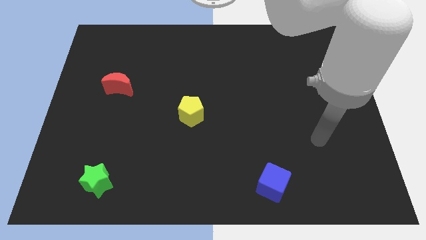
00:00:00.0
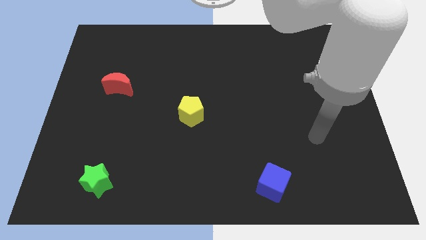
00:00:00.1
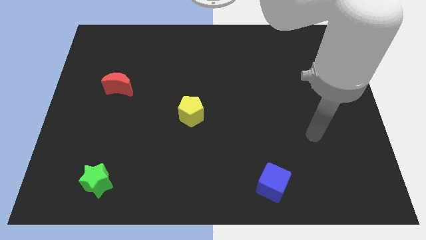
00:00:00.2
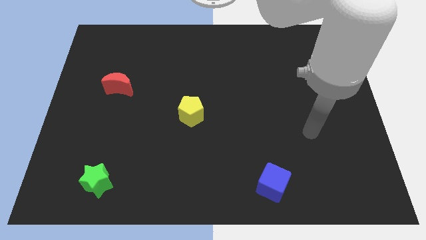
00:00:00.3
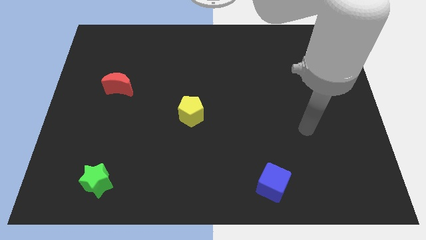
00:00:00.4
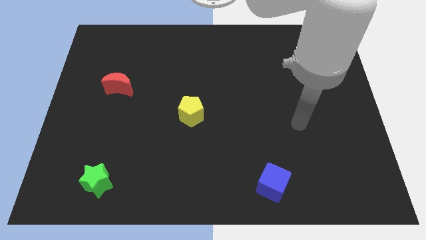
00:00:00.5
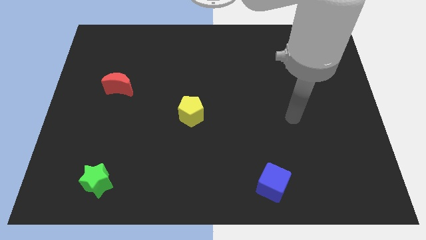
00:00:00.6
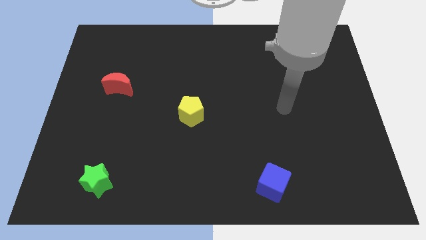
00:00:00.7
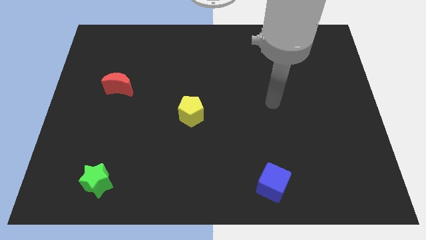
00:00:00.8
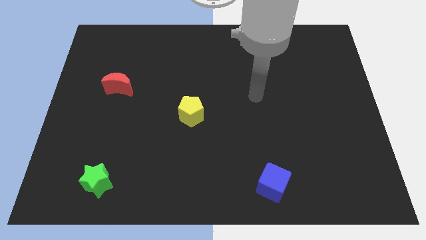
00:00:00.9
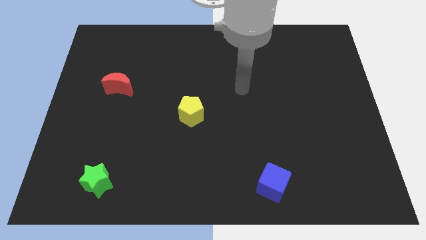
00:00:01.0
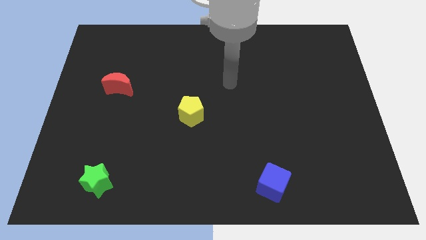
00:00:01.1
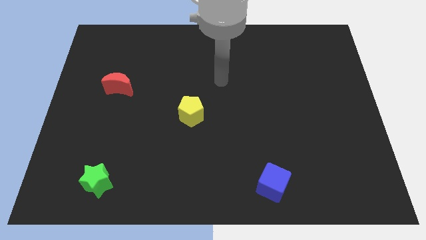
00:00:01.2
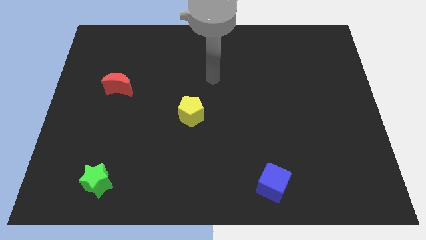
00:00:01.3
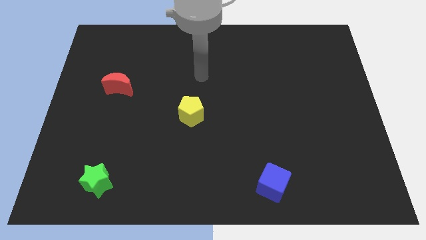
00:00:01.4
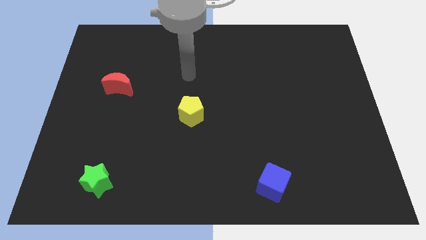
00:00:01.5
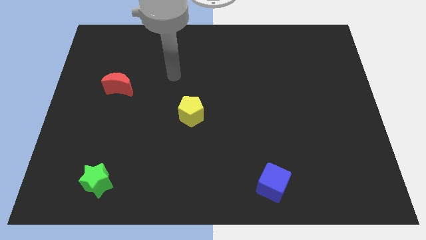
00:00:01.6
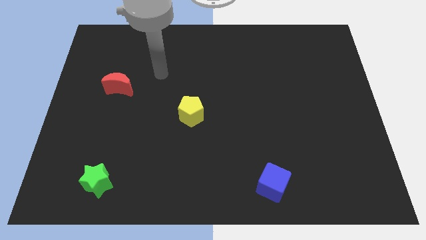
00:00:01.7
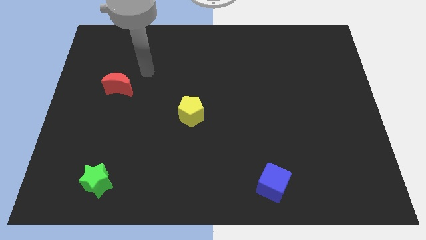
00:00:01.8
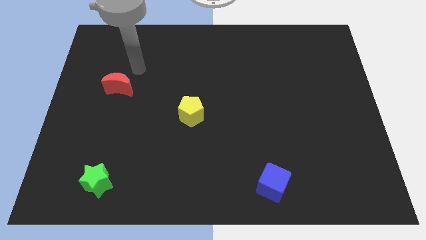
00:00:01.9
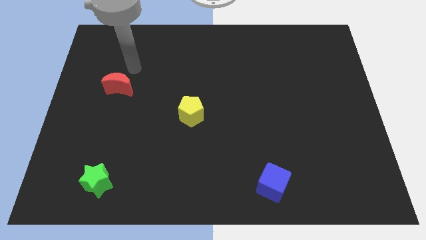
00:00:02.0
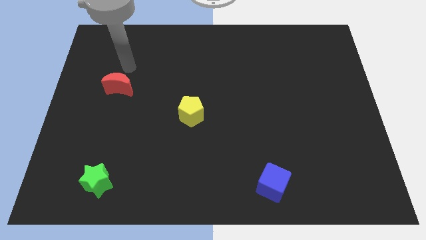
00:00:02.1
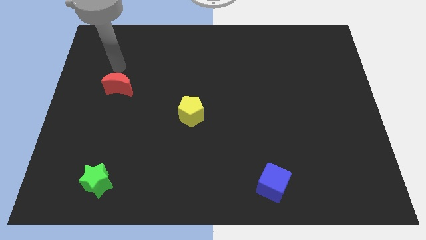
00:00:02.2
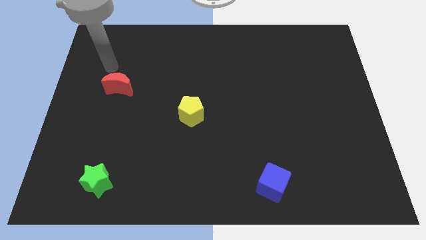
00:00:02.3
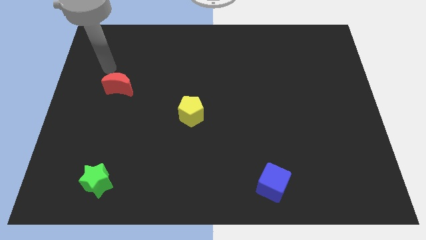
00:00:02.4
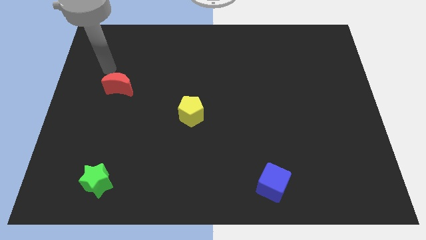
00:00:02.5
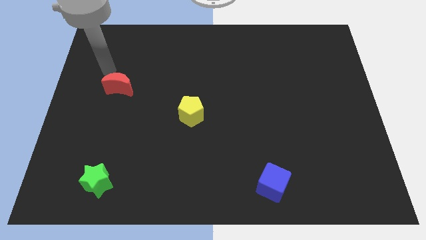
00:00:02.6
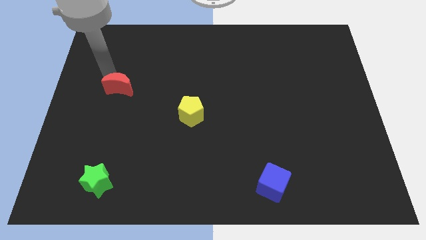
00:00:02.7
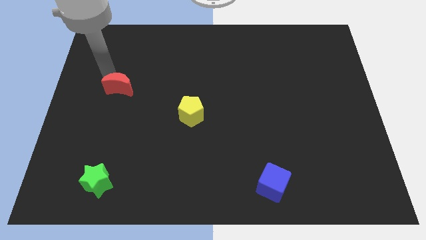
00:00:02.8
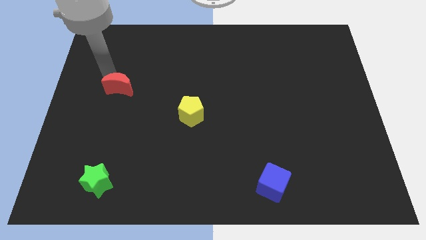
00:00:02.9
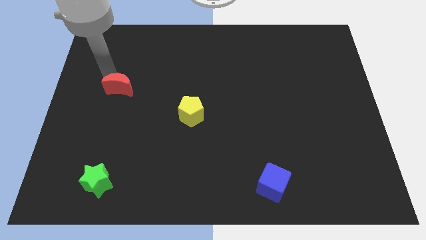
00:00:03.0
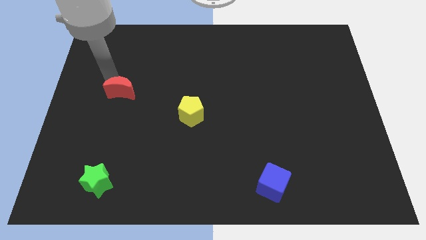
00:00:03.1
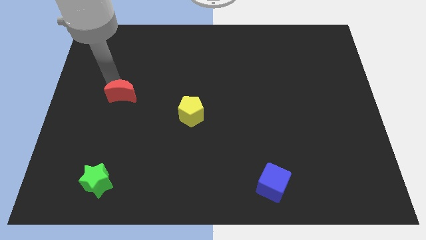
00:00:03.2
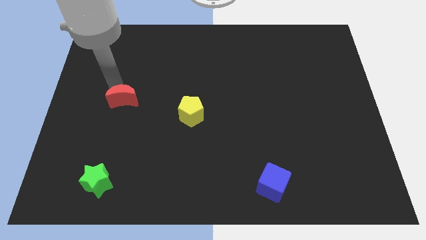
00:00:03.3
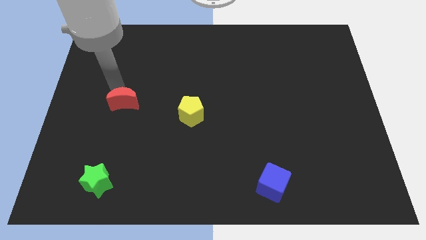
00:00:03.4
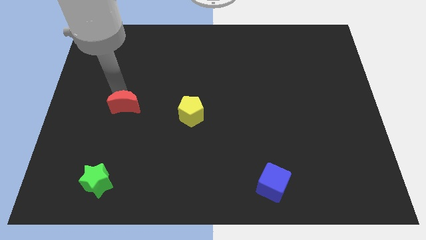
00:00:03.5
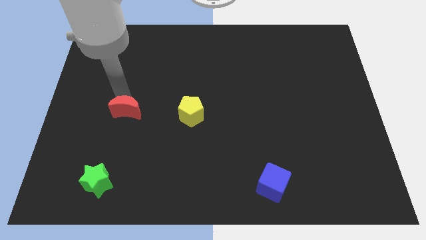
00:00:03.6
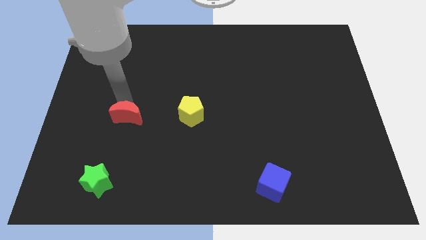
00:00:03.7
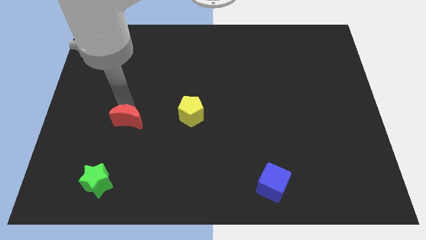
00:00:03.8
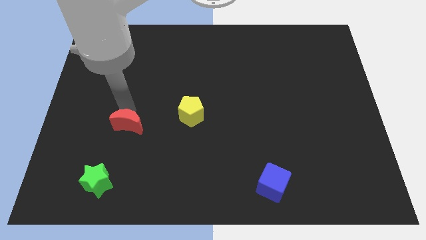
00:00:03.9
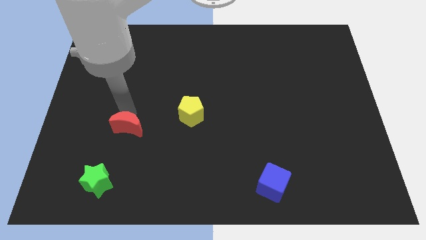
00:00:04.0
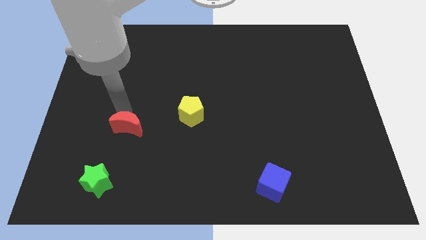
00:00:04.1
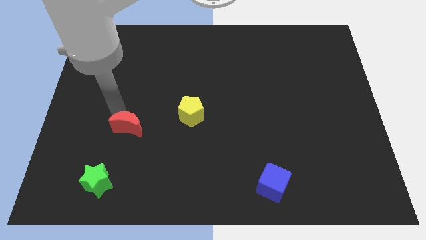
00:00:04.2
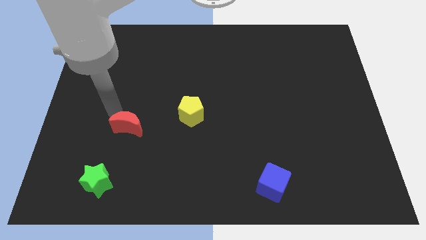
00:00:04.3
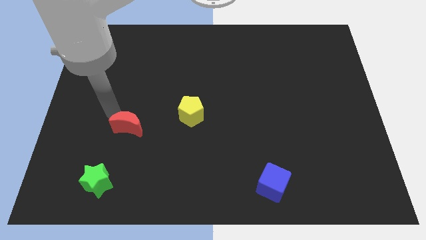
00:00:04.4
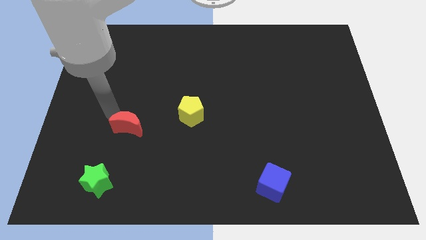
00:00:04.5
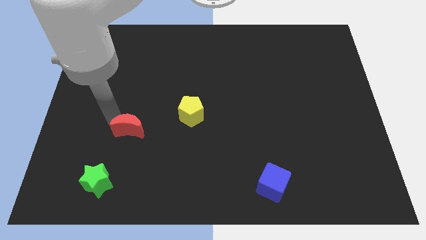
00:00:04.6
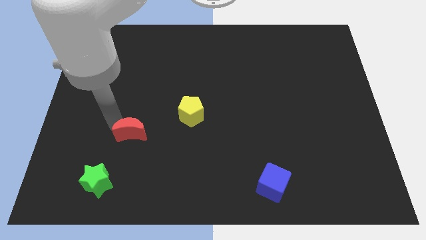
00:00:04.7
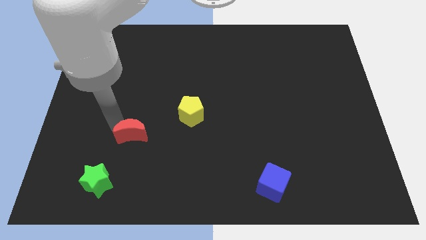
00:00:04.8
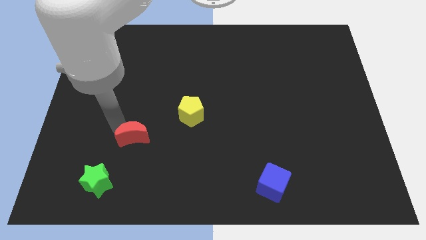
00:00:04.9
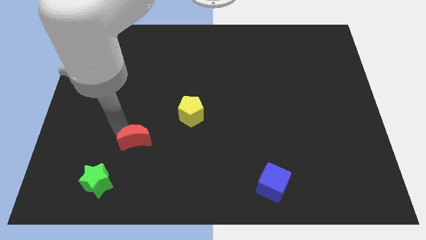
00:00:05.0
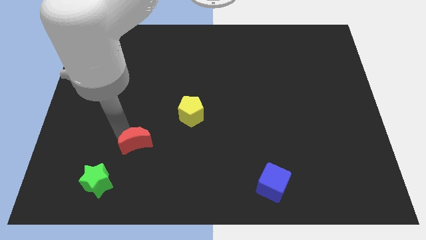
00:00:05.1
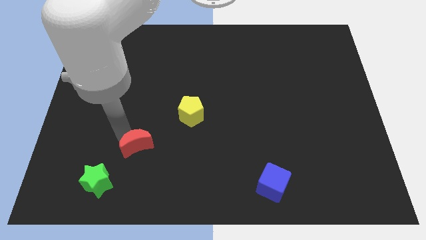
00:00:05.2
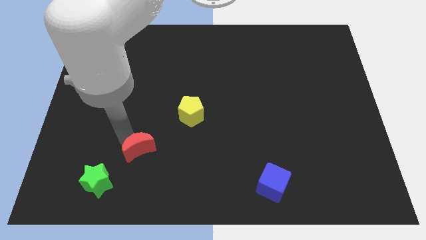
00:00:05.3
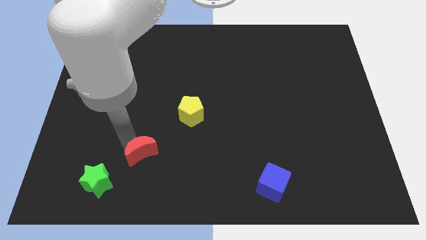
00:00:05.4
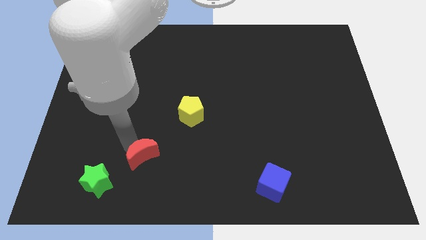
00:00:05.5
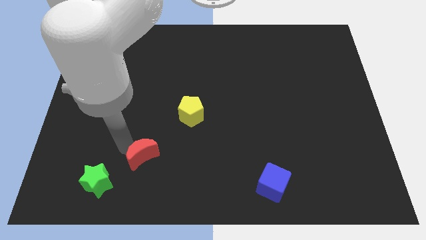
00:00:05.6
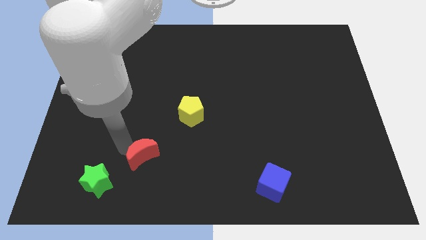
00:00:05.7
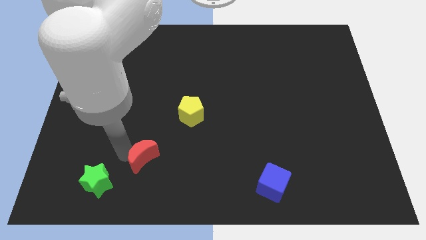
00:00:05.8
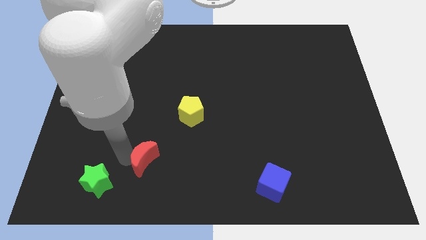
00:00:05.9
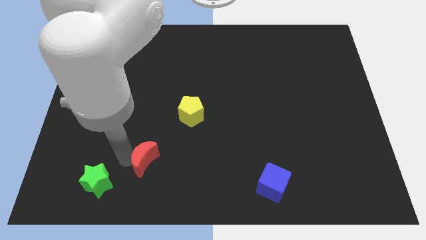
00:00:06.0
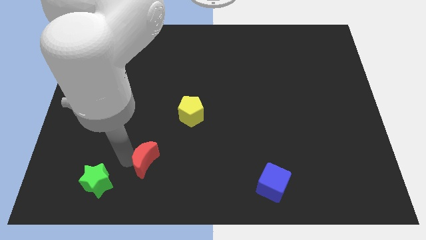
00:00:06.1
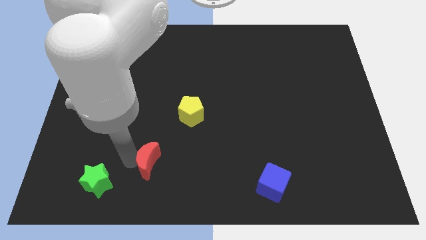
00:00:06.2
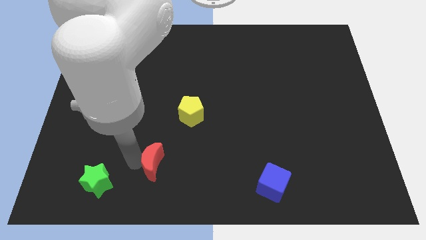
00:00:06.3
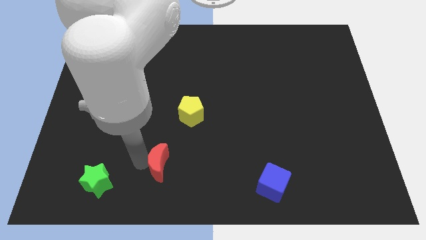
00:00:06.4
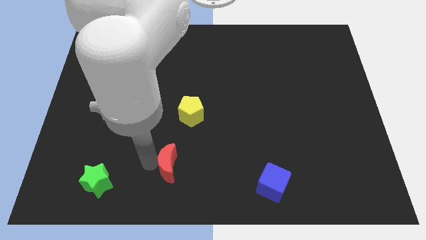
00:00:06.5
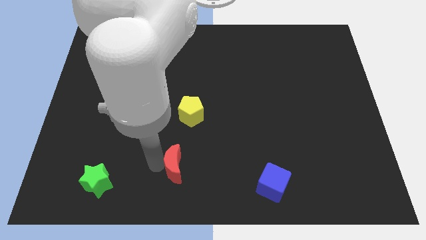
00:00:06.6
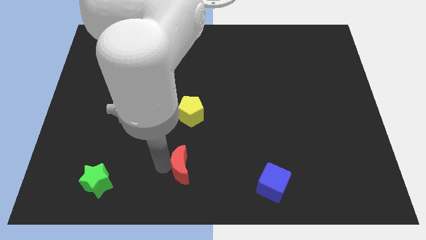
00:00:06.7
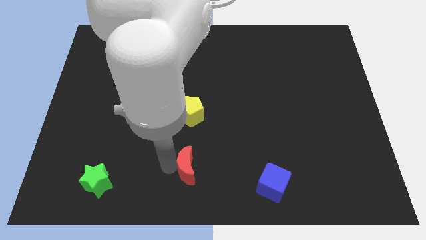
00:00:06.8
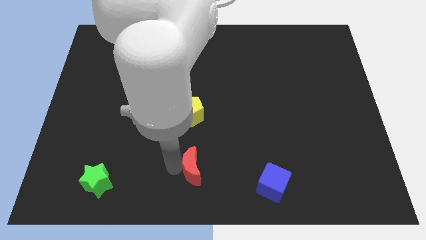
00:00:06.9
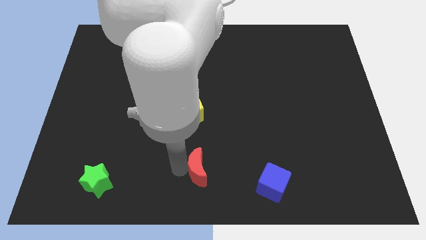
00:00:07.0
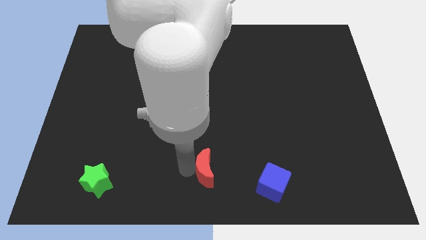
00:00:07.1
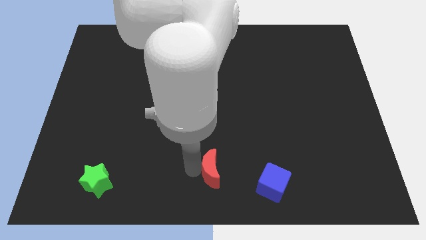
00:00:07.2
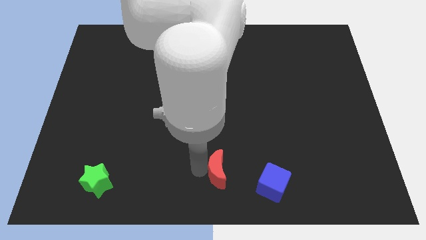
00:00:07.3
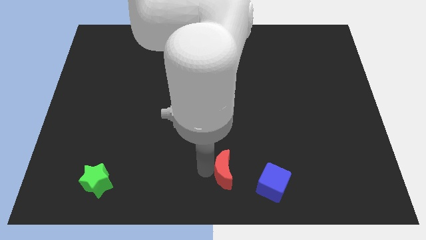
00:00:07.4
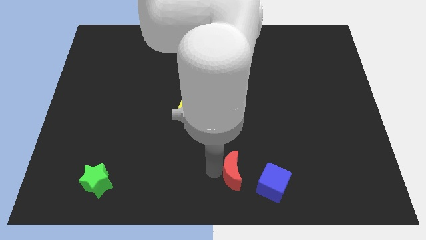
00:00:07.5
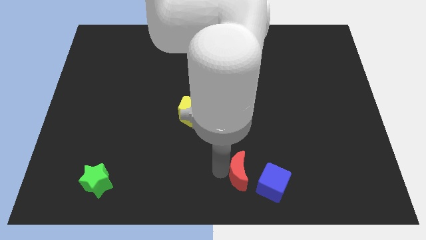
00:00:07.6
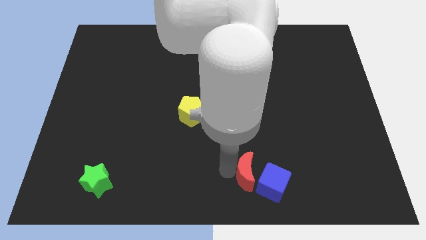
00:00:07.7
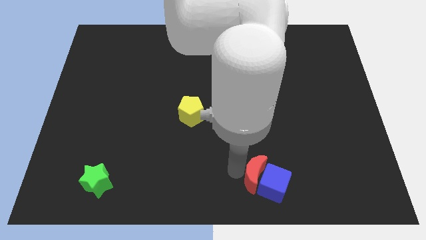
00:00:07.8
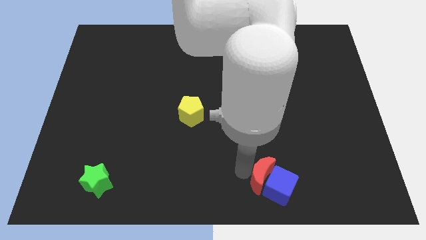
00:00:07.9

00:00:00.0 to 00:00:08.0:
push the red block close to the blue block
